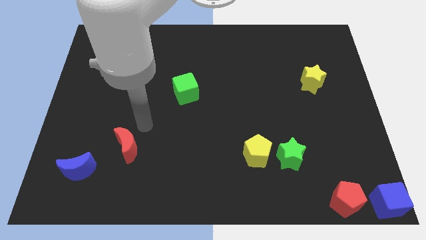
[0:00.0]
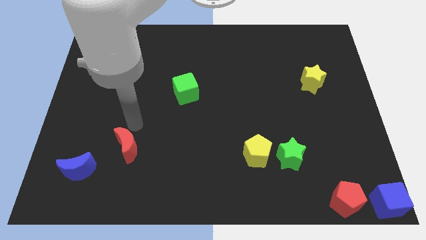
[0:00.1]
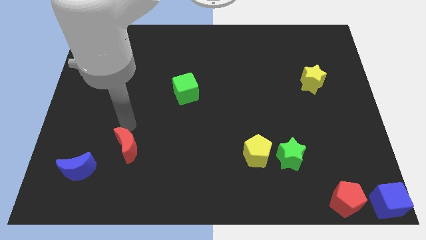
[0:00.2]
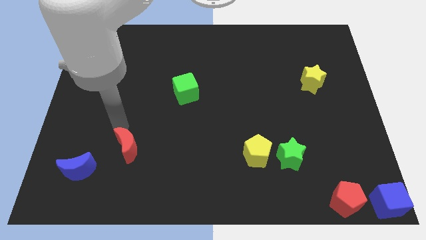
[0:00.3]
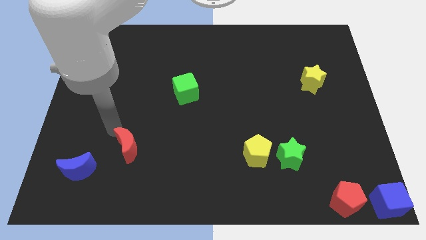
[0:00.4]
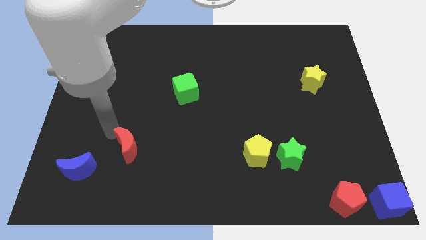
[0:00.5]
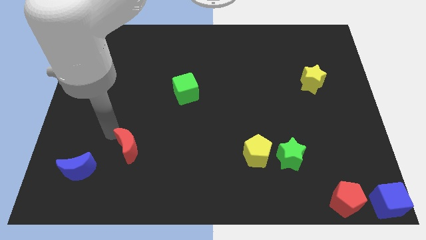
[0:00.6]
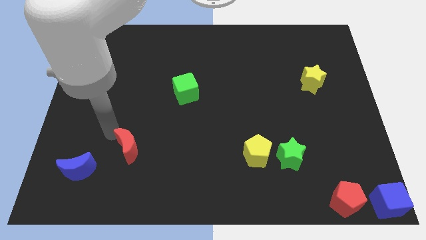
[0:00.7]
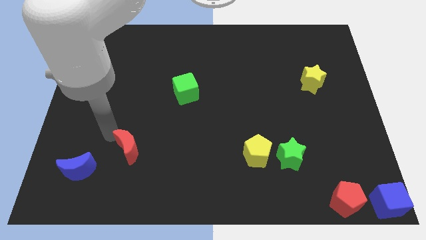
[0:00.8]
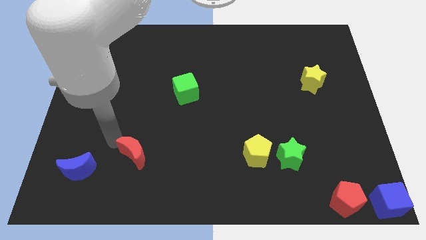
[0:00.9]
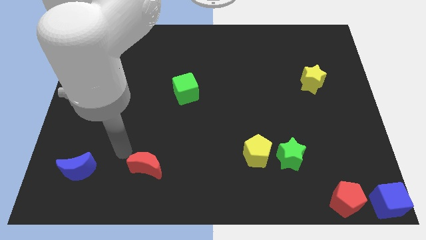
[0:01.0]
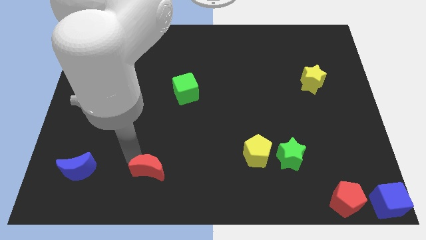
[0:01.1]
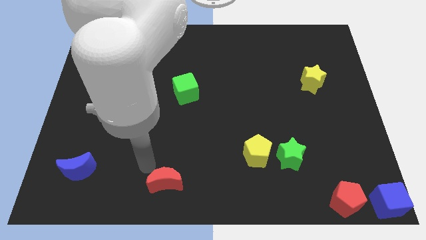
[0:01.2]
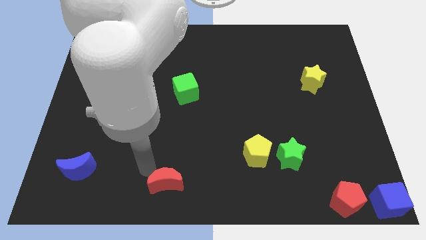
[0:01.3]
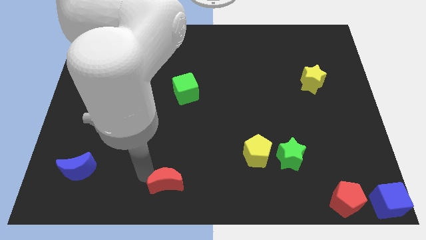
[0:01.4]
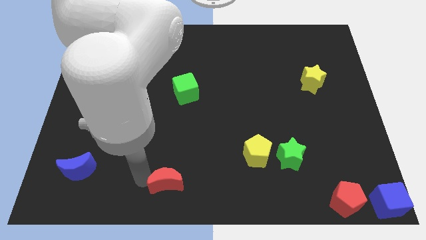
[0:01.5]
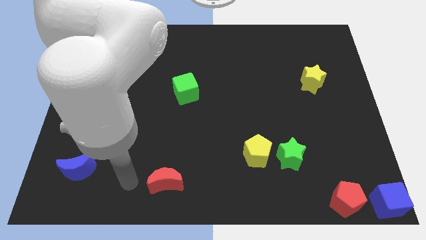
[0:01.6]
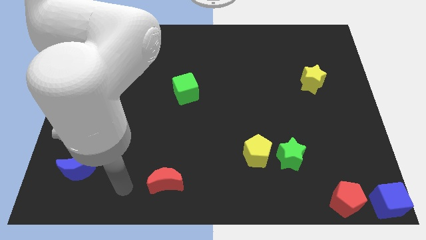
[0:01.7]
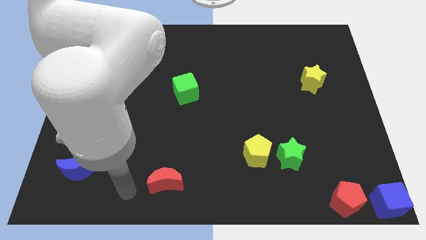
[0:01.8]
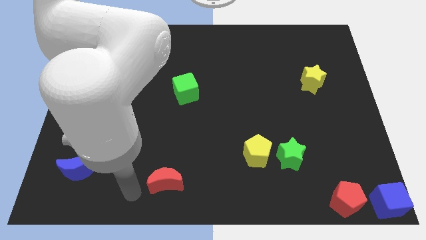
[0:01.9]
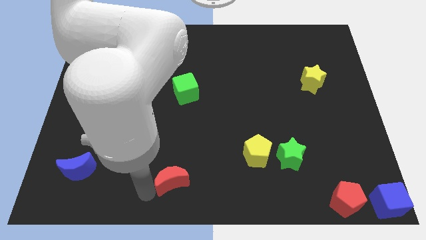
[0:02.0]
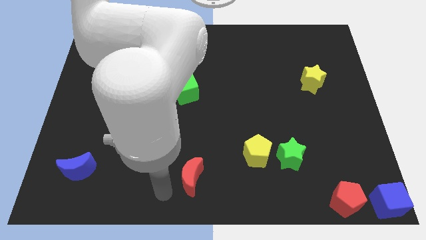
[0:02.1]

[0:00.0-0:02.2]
push red crescent towards center

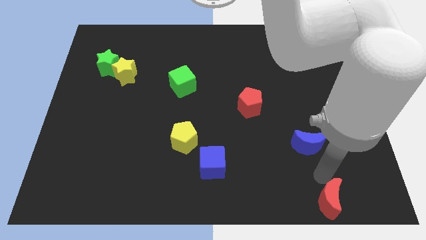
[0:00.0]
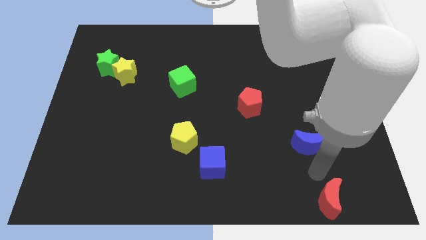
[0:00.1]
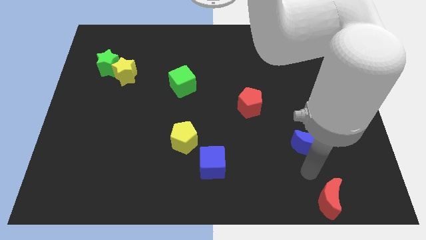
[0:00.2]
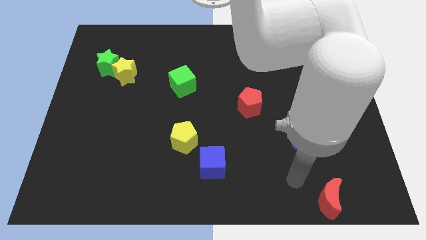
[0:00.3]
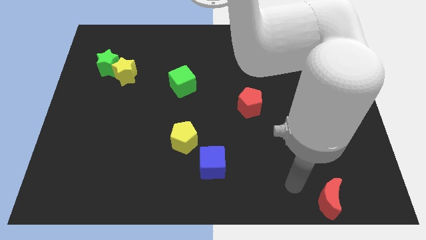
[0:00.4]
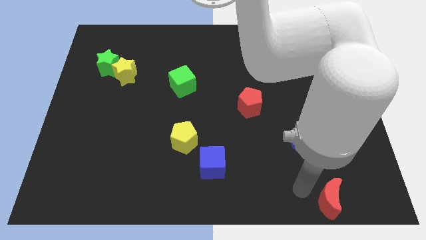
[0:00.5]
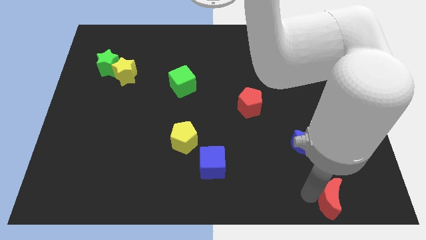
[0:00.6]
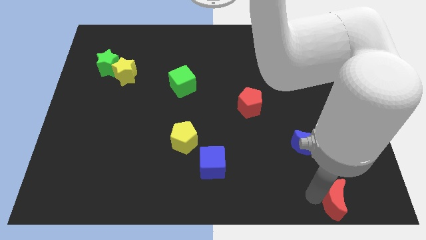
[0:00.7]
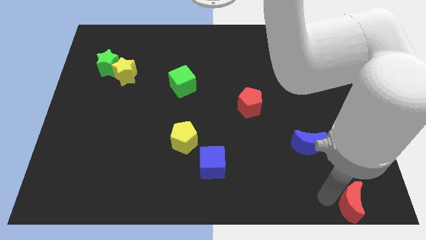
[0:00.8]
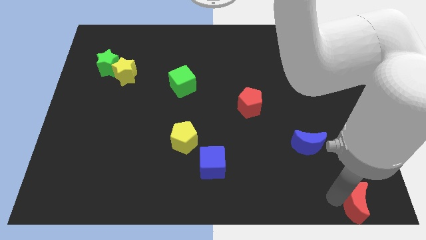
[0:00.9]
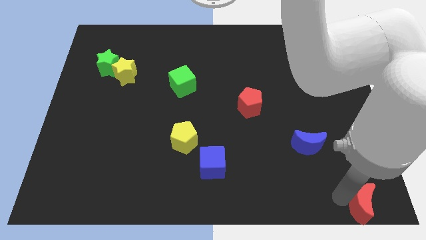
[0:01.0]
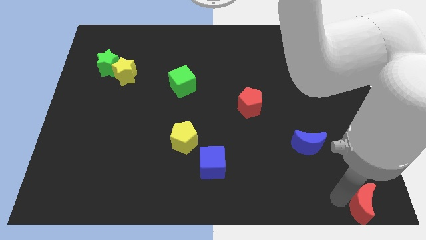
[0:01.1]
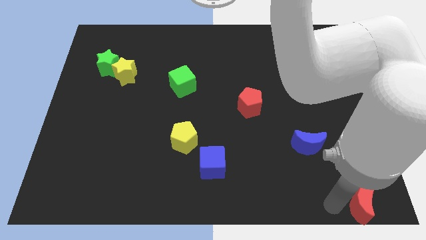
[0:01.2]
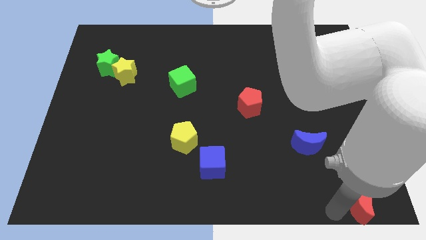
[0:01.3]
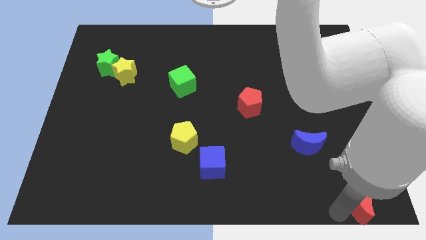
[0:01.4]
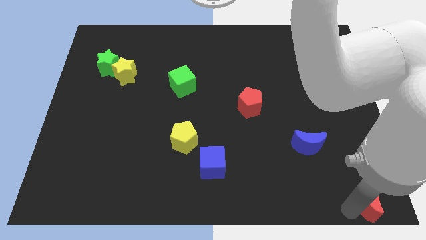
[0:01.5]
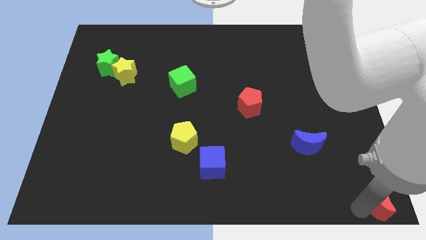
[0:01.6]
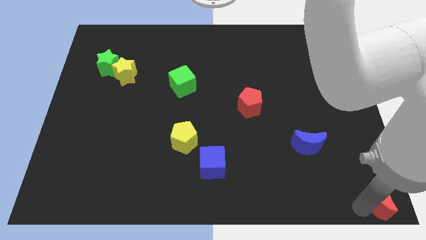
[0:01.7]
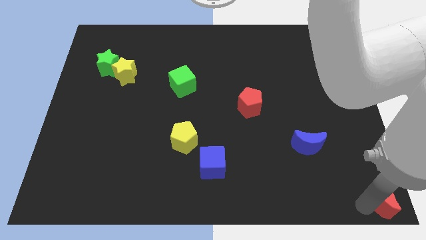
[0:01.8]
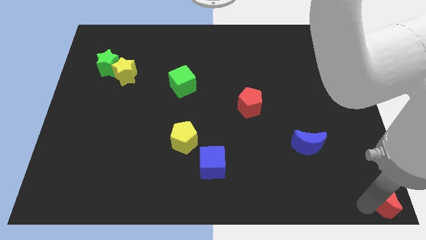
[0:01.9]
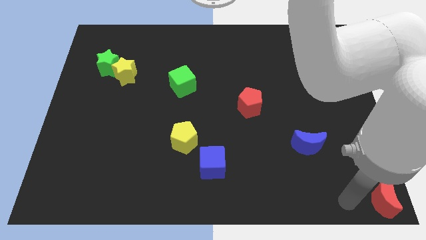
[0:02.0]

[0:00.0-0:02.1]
place the red moon to the bottom right corner of the board

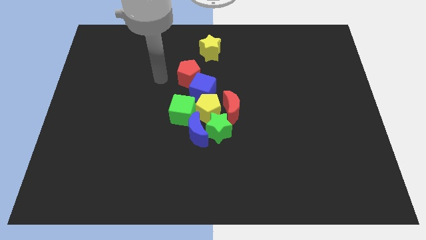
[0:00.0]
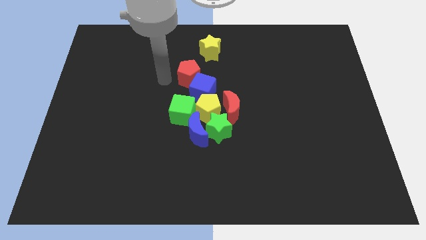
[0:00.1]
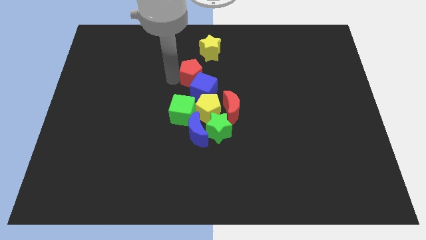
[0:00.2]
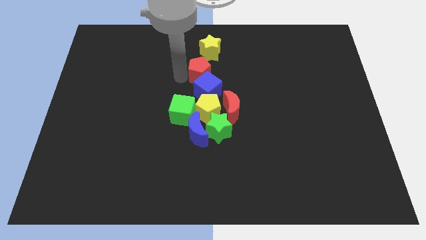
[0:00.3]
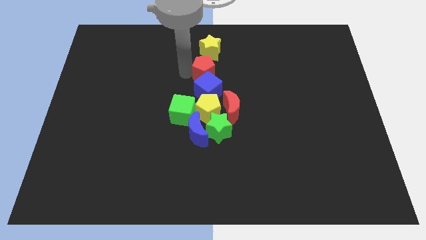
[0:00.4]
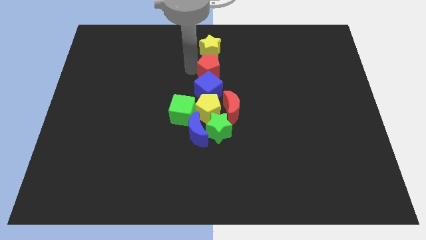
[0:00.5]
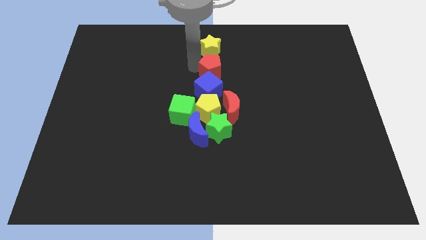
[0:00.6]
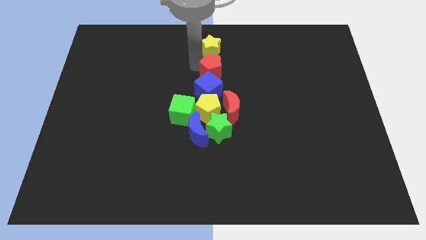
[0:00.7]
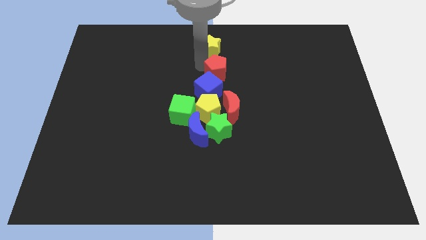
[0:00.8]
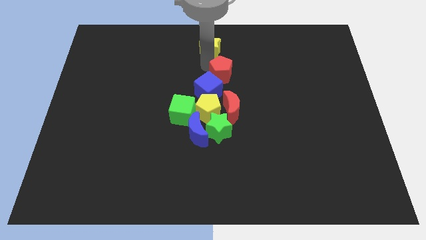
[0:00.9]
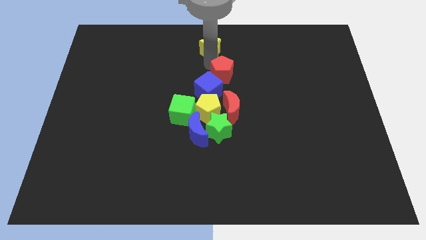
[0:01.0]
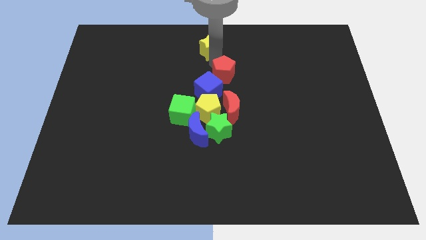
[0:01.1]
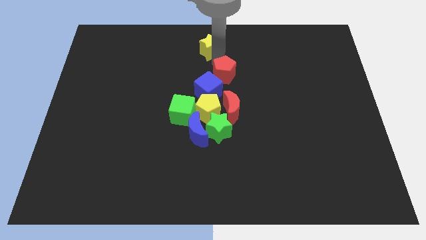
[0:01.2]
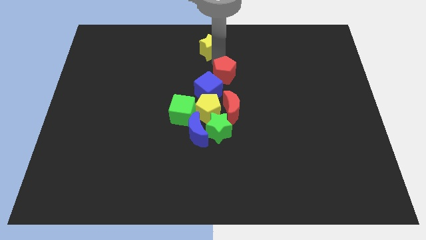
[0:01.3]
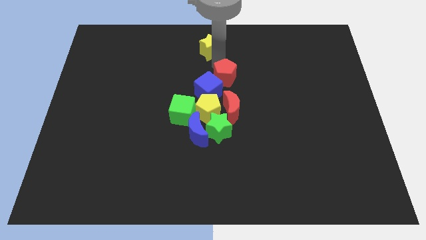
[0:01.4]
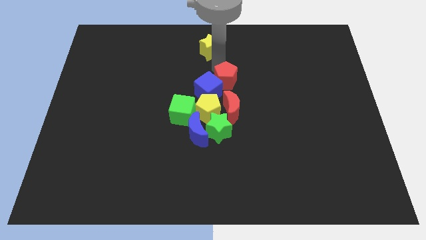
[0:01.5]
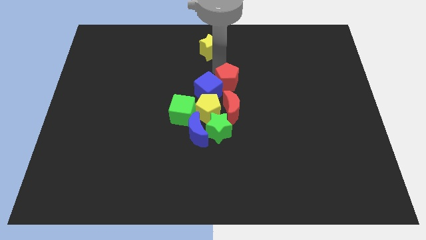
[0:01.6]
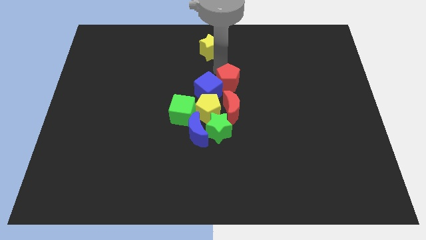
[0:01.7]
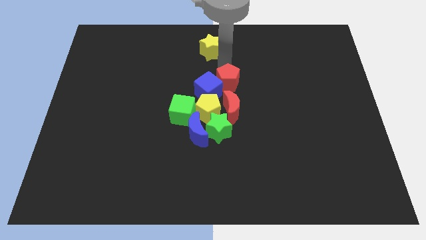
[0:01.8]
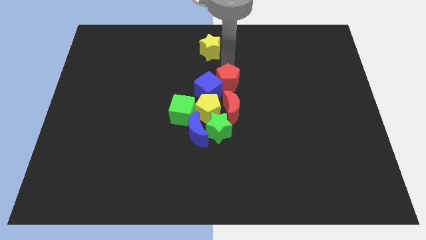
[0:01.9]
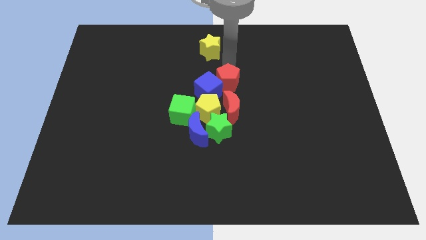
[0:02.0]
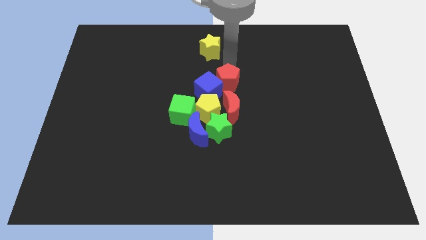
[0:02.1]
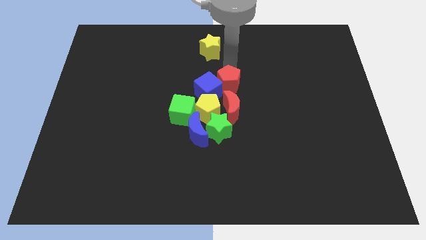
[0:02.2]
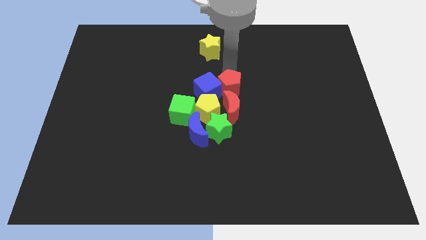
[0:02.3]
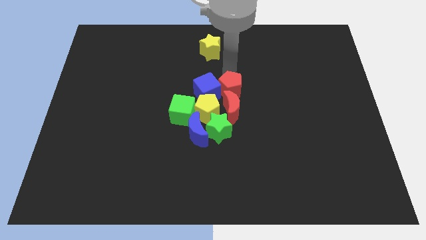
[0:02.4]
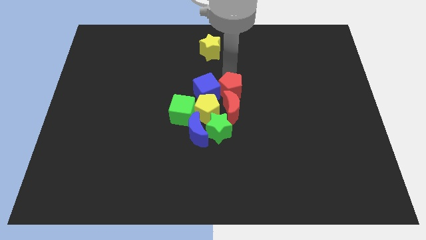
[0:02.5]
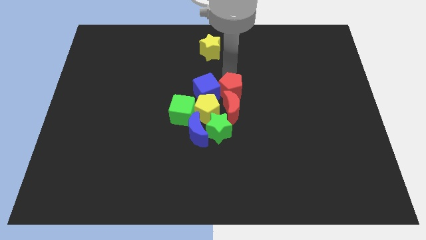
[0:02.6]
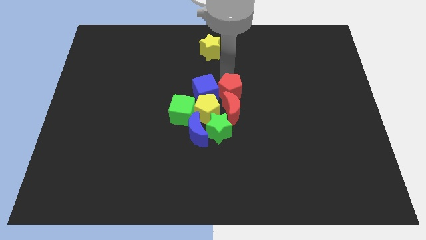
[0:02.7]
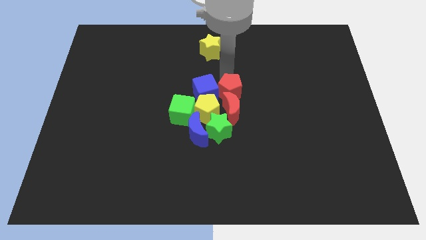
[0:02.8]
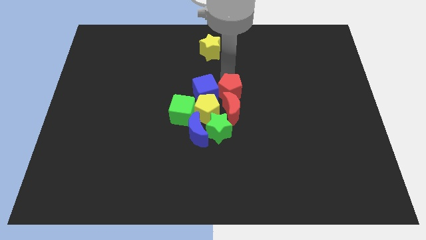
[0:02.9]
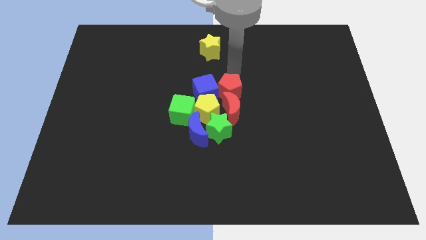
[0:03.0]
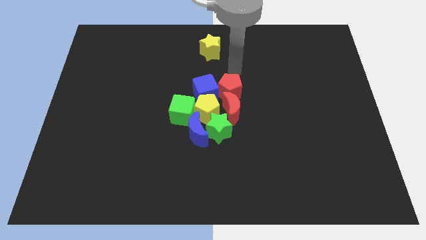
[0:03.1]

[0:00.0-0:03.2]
move the red pentagon to the right side of the blue cube

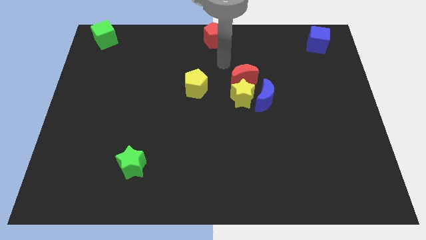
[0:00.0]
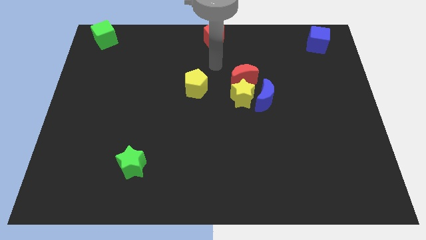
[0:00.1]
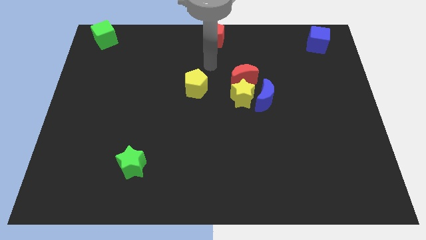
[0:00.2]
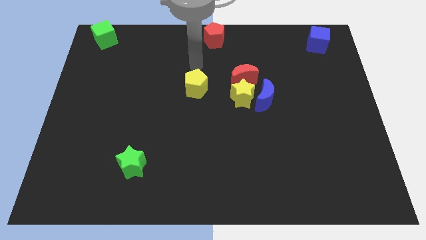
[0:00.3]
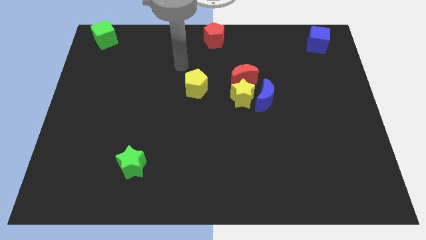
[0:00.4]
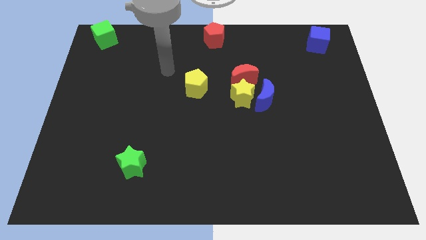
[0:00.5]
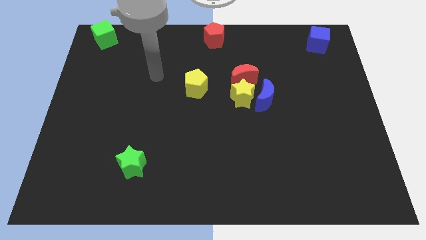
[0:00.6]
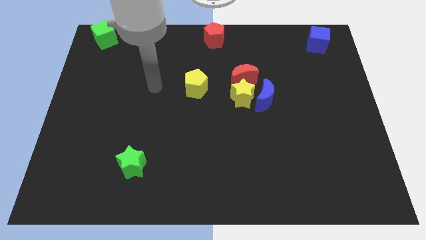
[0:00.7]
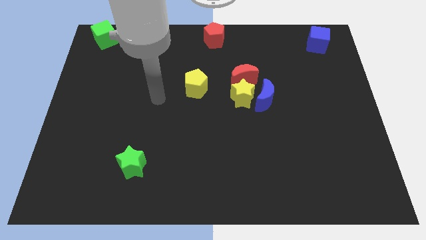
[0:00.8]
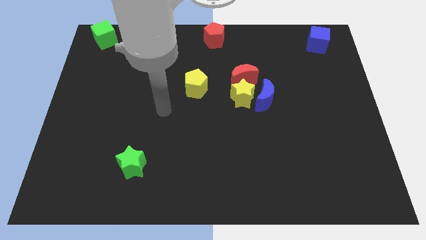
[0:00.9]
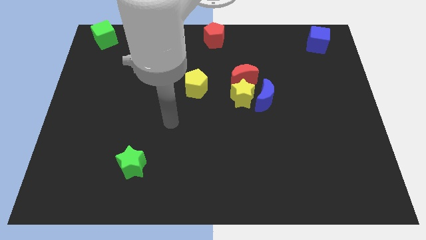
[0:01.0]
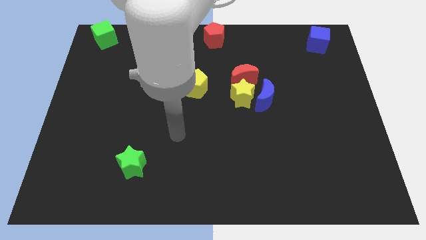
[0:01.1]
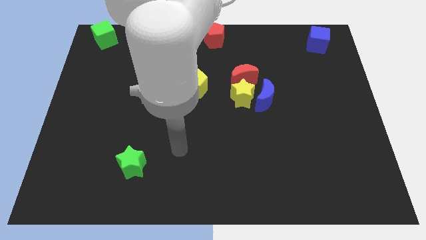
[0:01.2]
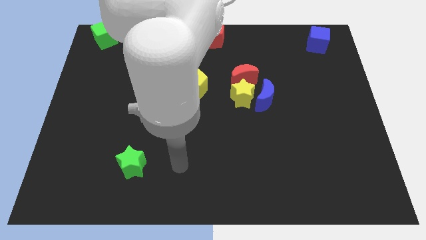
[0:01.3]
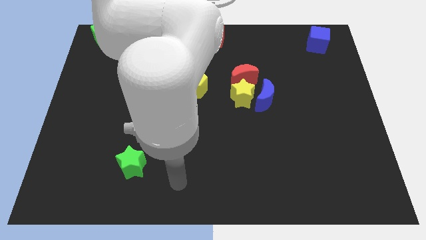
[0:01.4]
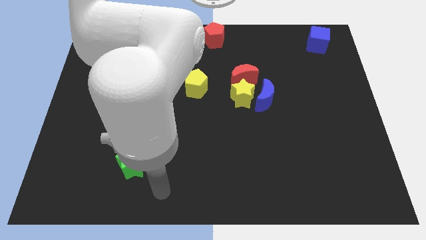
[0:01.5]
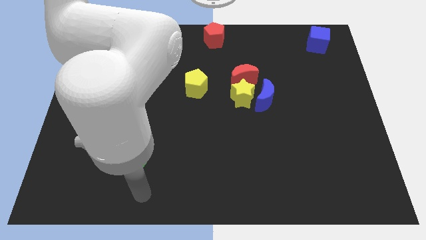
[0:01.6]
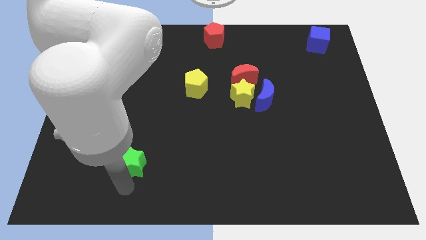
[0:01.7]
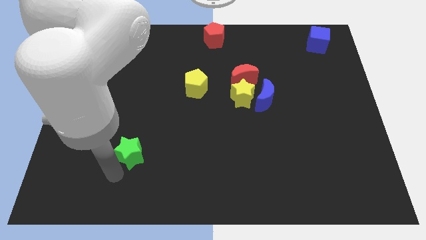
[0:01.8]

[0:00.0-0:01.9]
touch the bottom side of the green star
